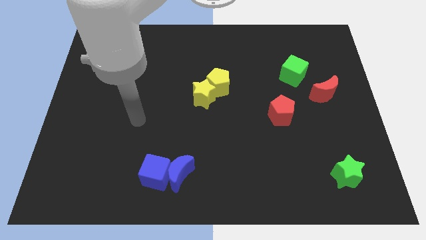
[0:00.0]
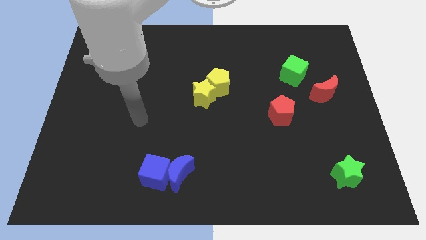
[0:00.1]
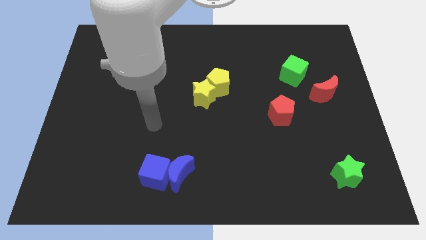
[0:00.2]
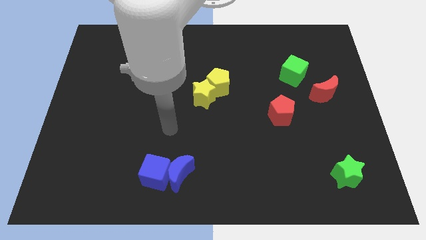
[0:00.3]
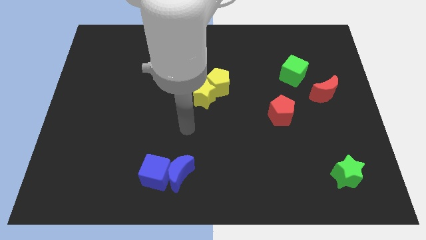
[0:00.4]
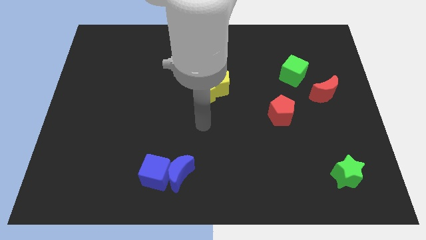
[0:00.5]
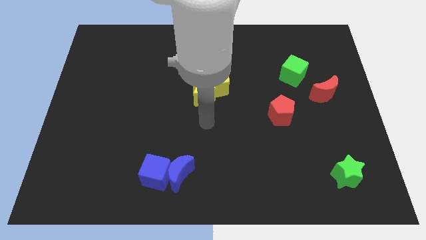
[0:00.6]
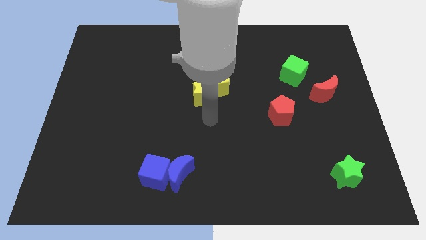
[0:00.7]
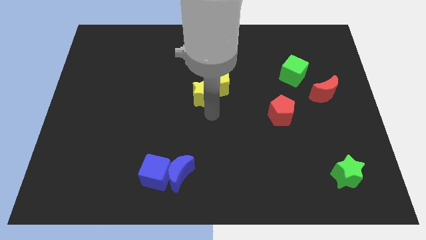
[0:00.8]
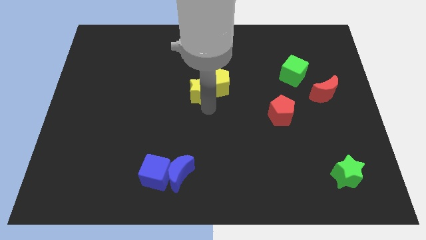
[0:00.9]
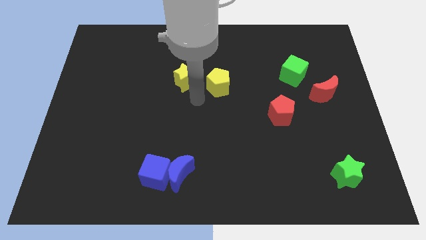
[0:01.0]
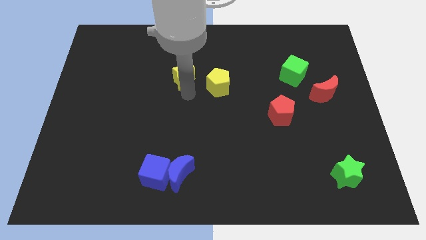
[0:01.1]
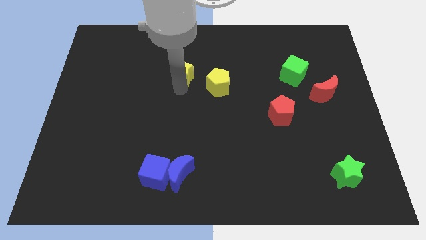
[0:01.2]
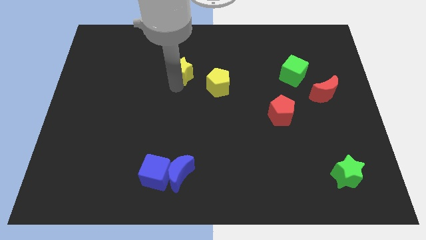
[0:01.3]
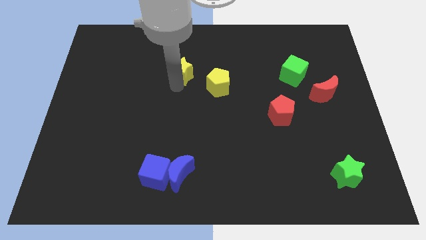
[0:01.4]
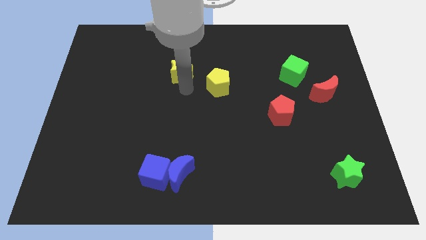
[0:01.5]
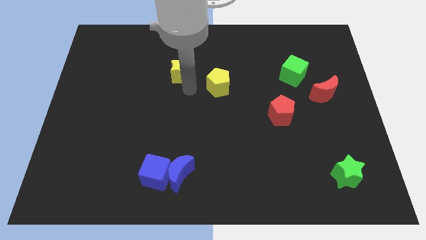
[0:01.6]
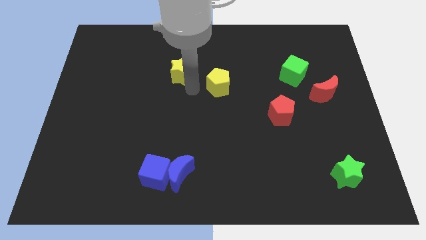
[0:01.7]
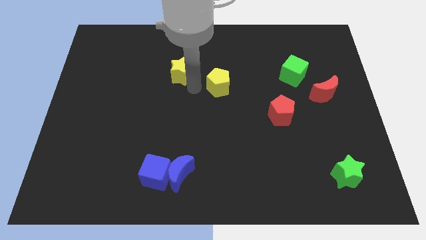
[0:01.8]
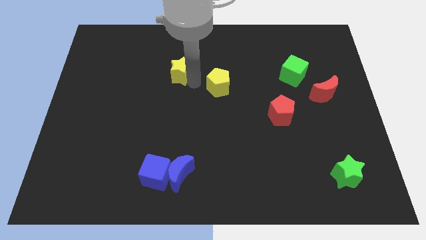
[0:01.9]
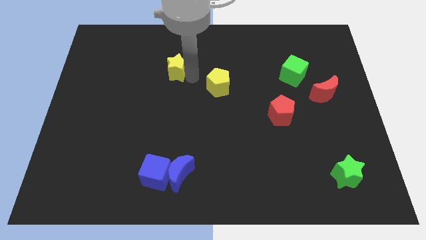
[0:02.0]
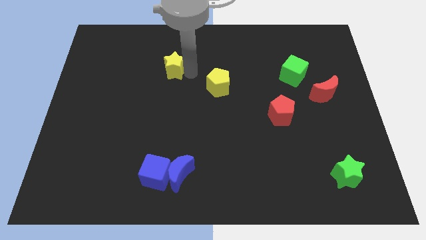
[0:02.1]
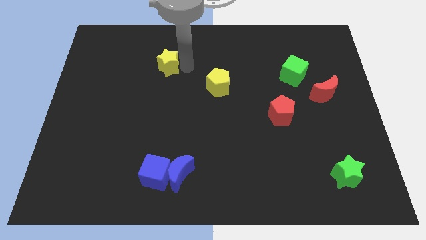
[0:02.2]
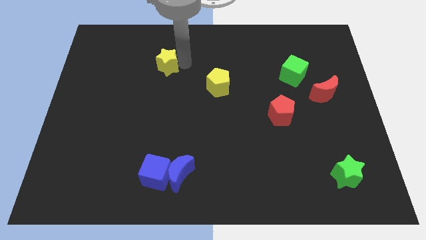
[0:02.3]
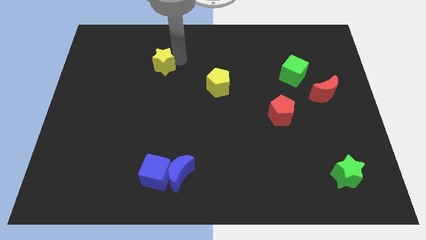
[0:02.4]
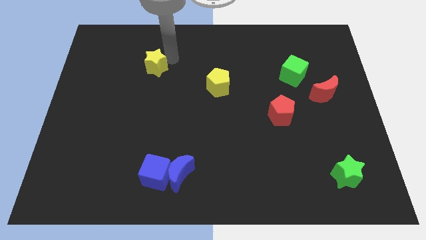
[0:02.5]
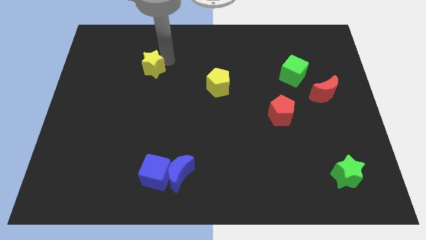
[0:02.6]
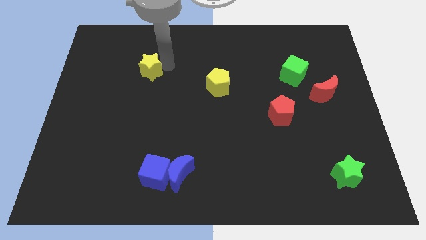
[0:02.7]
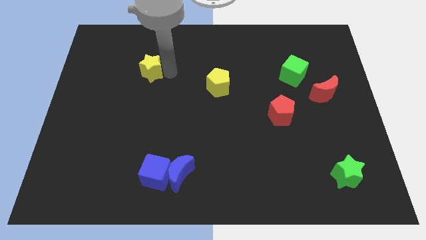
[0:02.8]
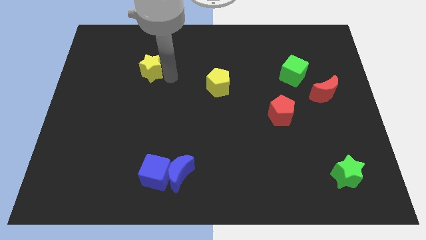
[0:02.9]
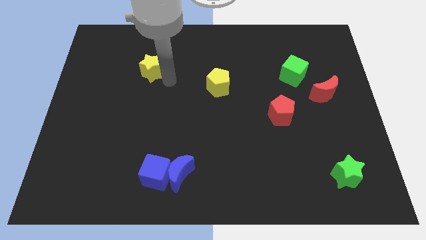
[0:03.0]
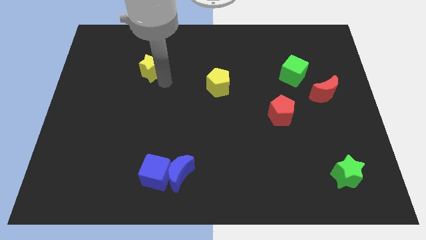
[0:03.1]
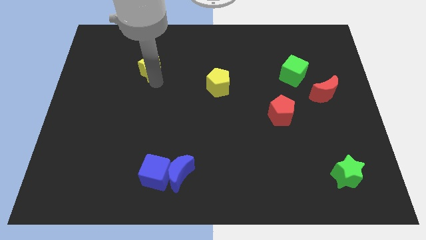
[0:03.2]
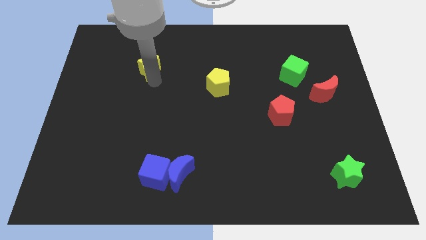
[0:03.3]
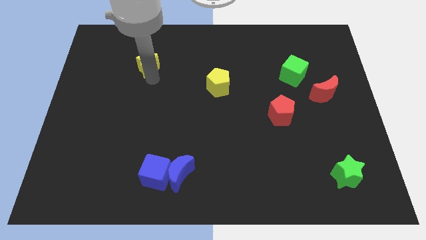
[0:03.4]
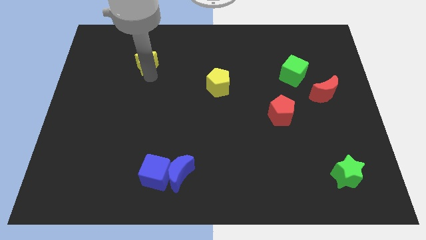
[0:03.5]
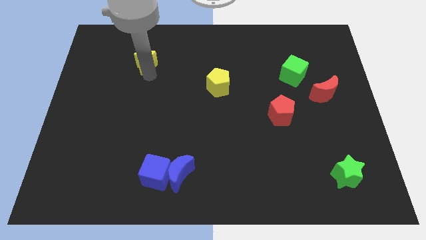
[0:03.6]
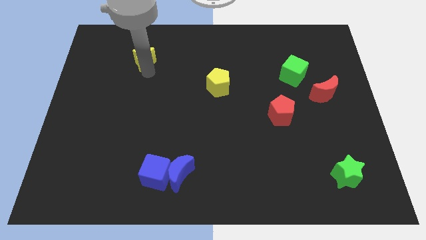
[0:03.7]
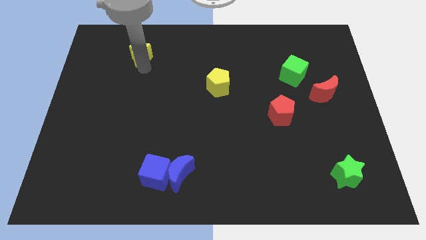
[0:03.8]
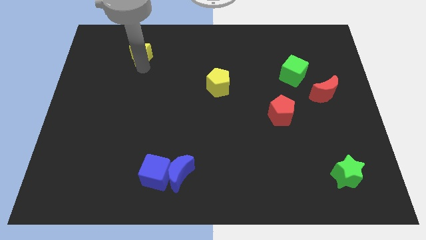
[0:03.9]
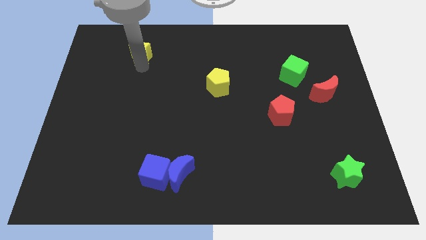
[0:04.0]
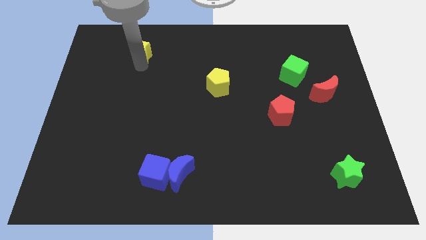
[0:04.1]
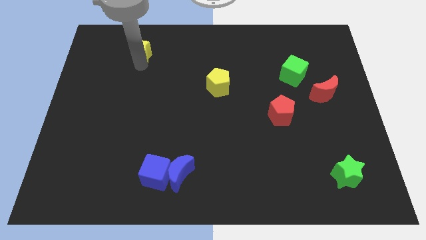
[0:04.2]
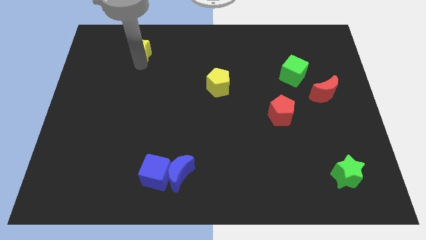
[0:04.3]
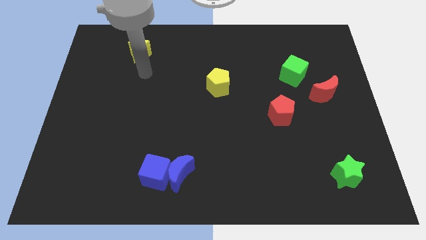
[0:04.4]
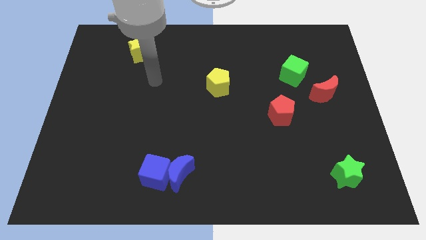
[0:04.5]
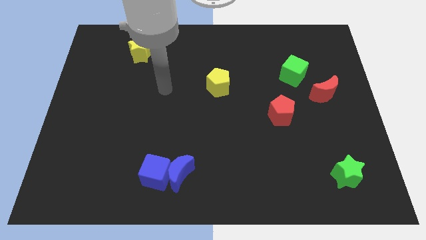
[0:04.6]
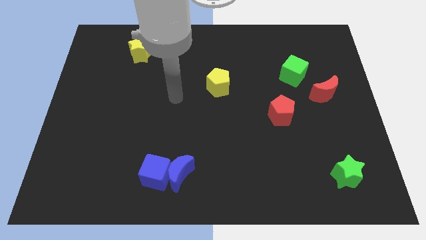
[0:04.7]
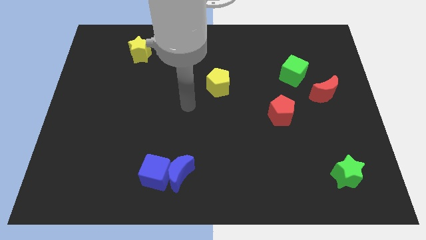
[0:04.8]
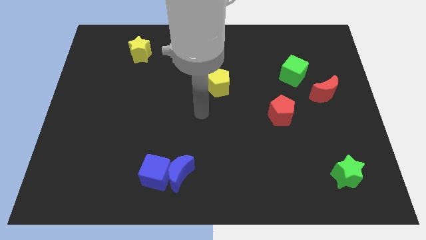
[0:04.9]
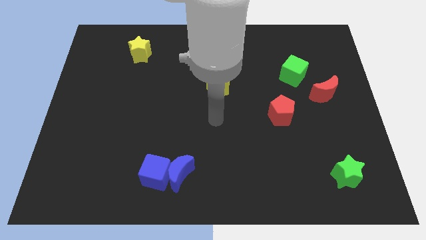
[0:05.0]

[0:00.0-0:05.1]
move yellow star towards top left corner of the board

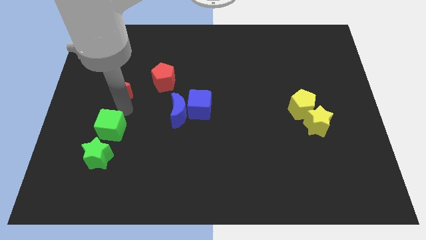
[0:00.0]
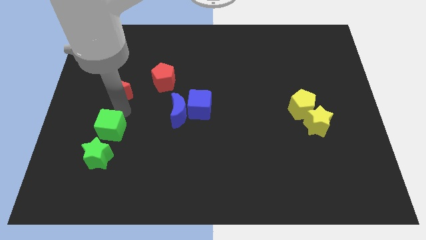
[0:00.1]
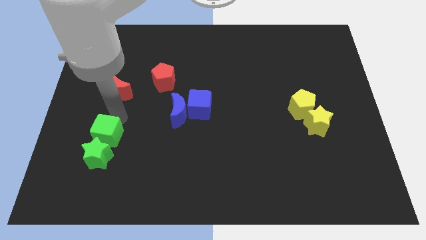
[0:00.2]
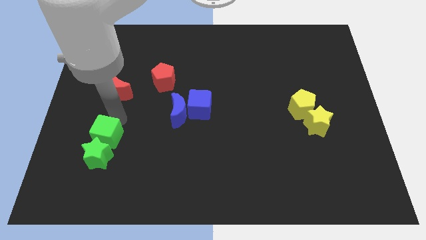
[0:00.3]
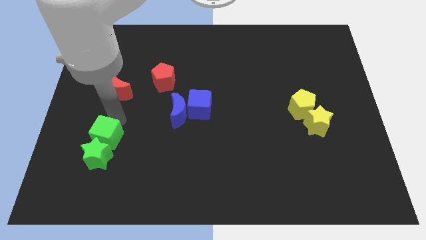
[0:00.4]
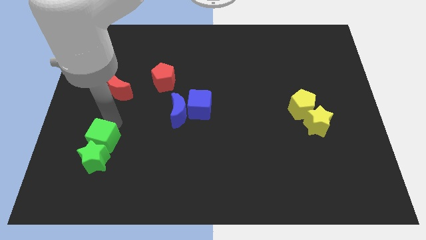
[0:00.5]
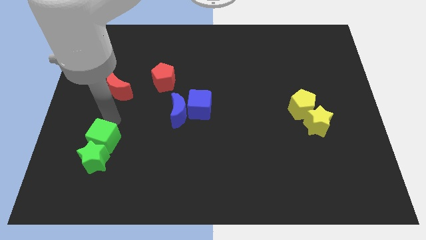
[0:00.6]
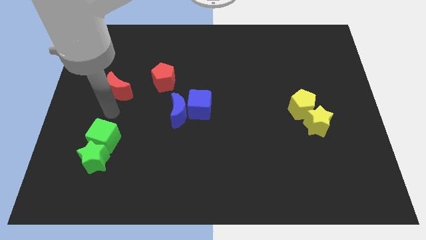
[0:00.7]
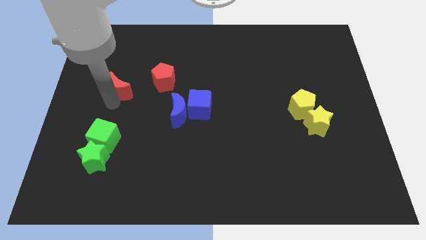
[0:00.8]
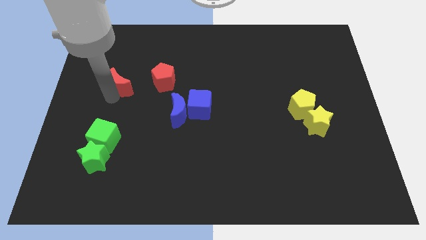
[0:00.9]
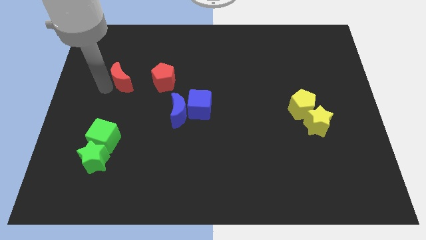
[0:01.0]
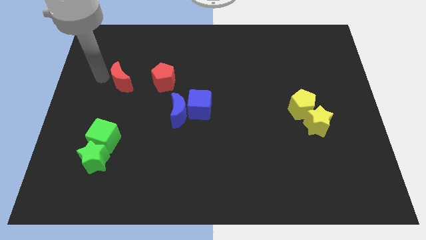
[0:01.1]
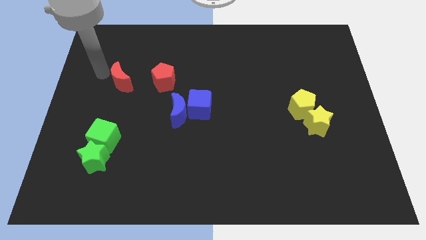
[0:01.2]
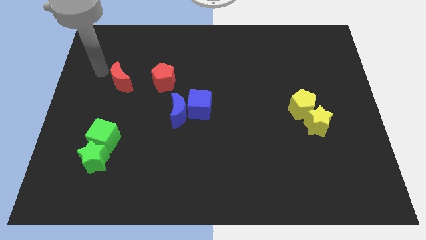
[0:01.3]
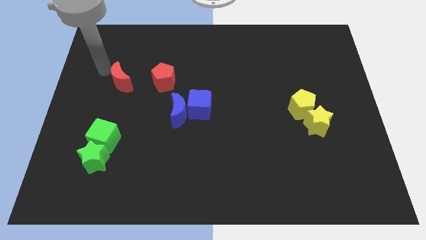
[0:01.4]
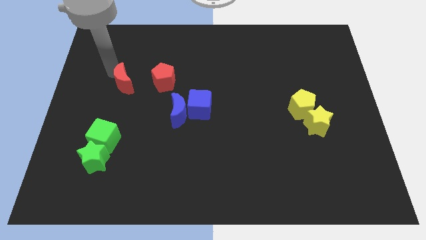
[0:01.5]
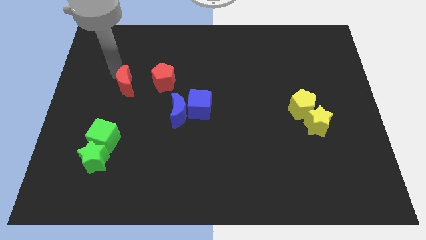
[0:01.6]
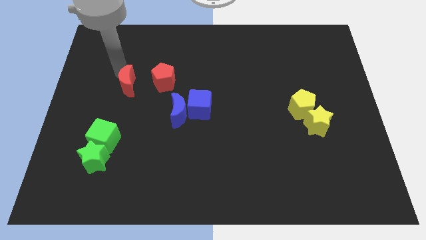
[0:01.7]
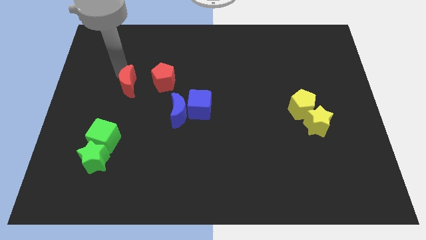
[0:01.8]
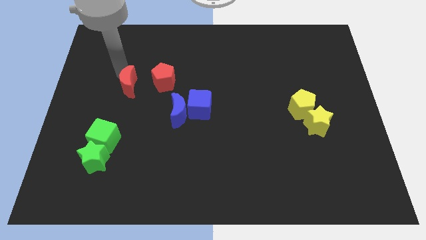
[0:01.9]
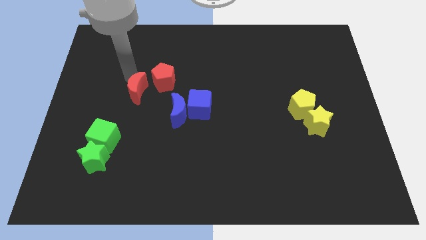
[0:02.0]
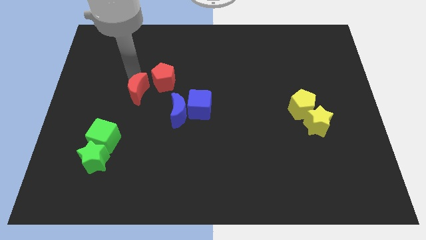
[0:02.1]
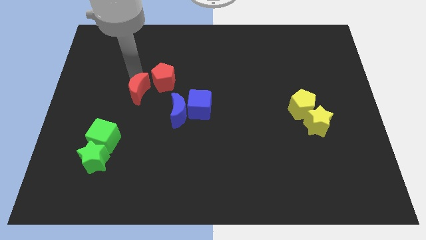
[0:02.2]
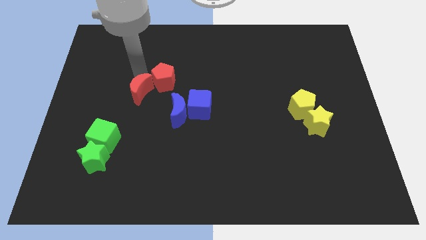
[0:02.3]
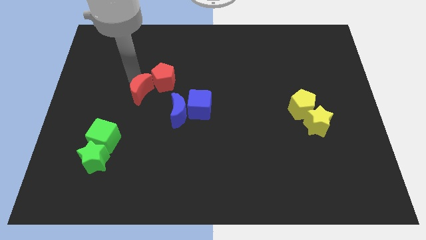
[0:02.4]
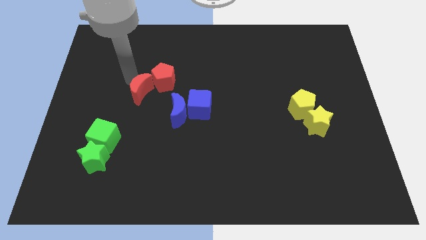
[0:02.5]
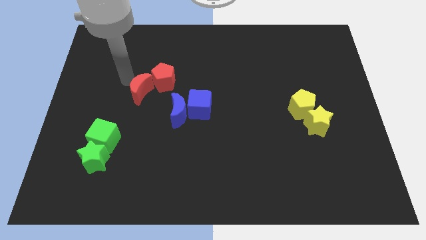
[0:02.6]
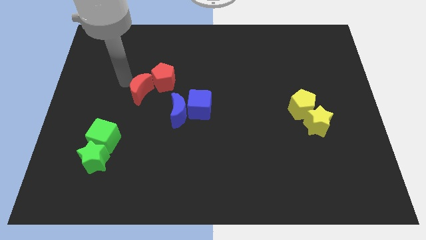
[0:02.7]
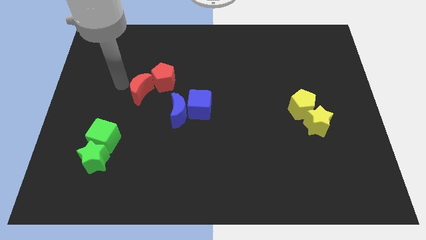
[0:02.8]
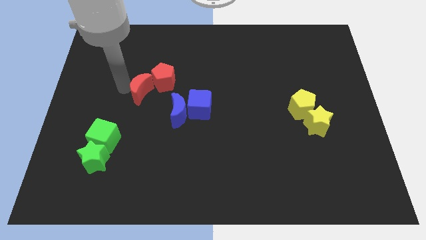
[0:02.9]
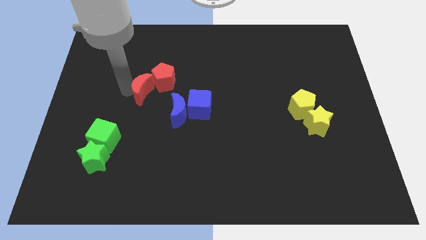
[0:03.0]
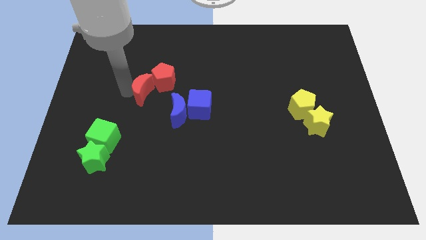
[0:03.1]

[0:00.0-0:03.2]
move green blocks slightly towards bottom left

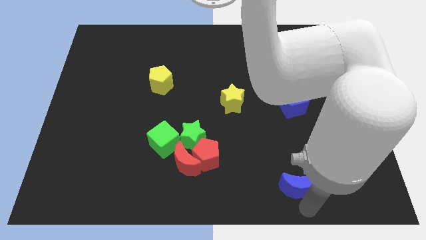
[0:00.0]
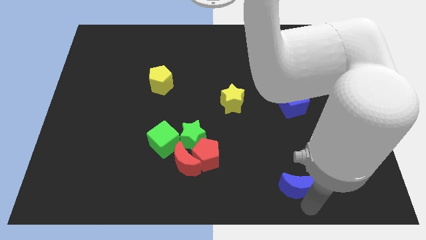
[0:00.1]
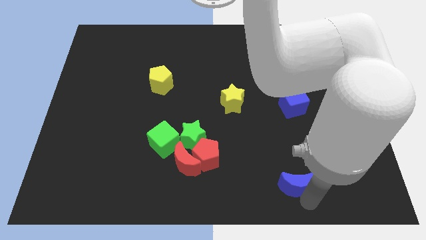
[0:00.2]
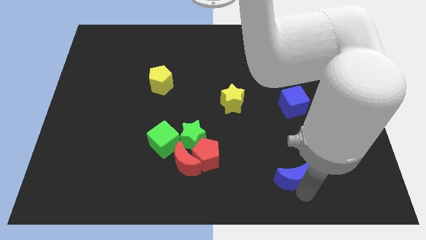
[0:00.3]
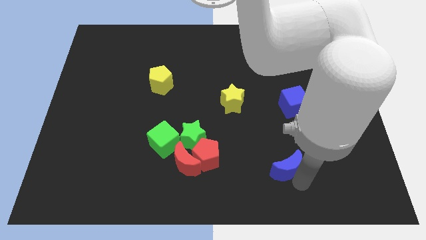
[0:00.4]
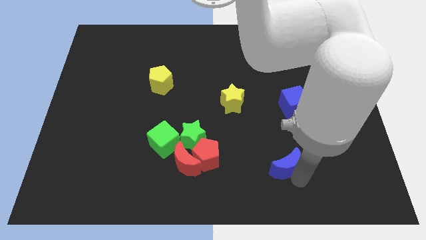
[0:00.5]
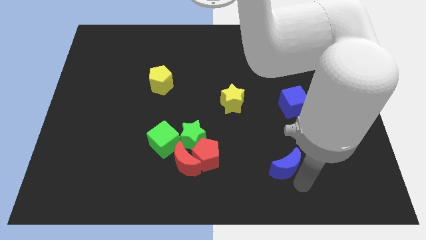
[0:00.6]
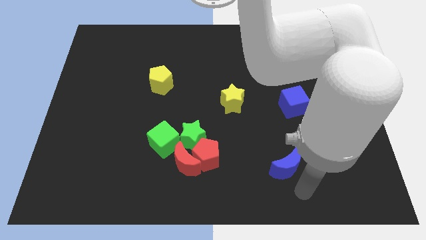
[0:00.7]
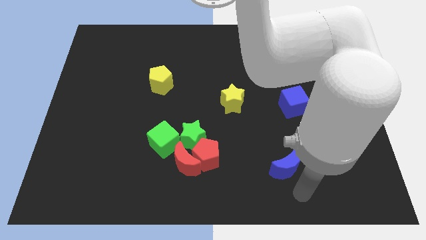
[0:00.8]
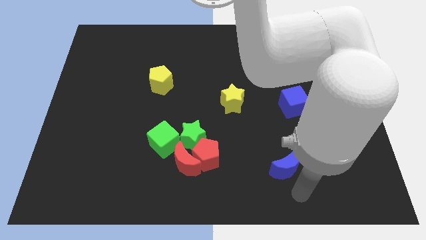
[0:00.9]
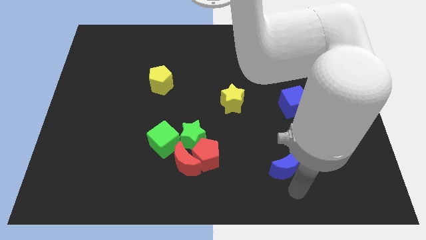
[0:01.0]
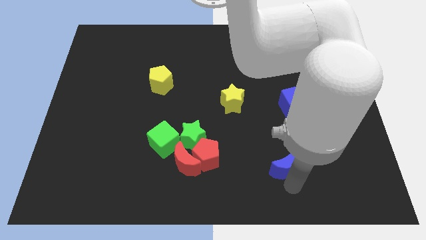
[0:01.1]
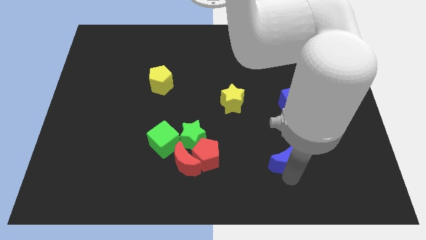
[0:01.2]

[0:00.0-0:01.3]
put the blue moon horizontally right to the red pentagon
